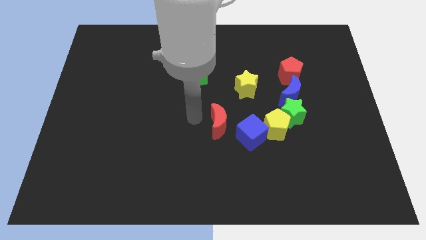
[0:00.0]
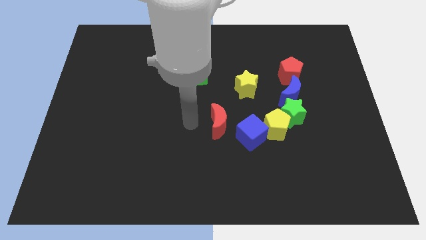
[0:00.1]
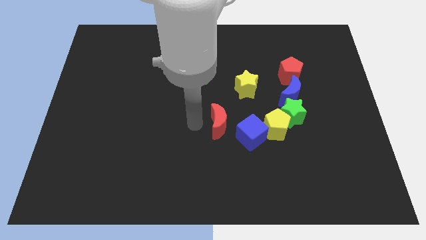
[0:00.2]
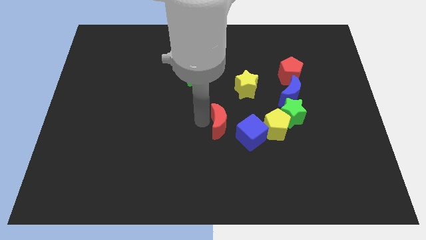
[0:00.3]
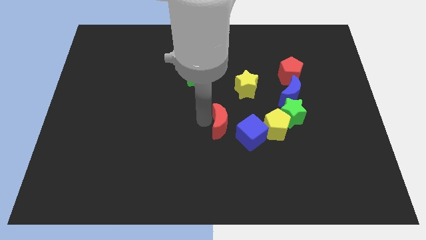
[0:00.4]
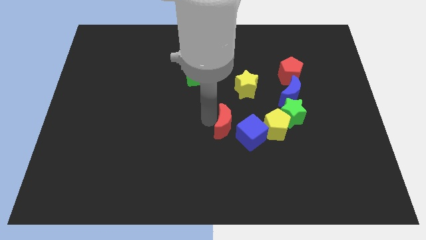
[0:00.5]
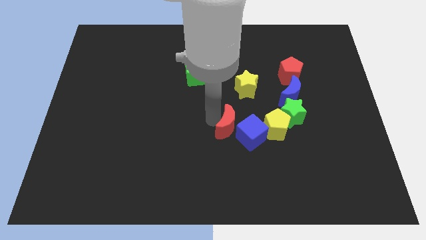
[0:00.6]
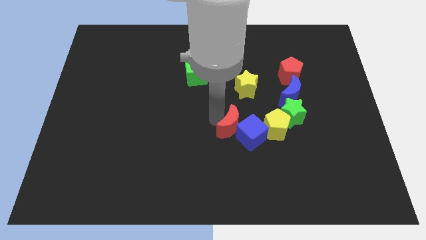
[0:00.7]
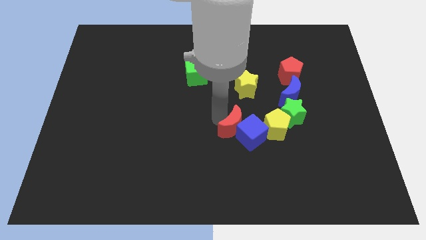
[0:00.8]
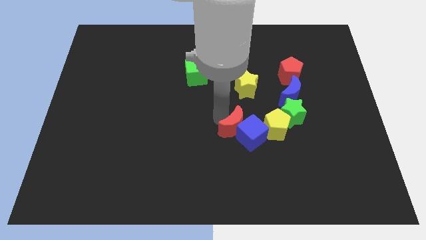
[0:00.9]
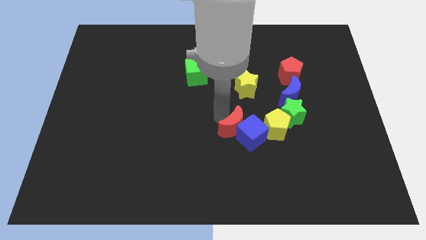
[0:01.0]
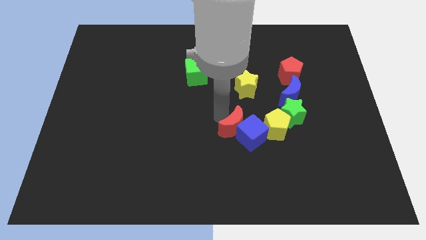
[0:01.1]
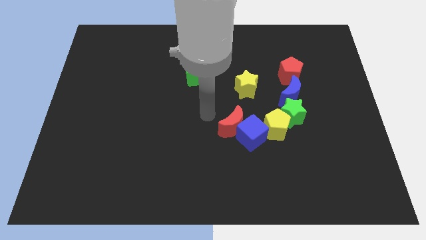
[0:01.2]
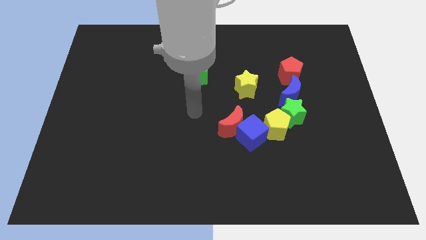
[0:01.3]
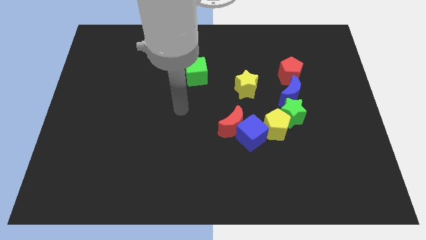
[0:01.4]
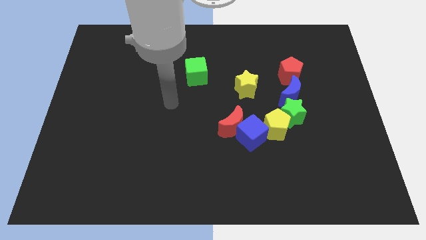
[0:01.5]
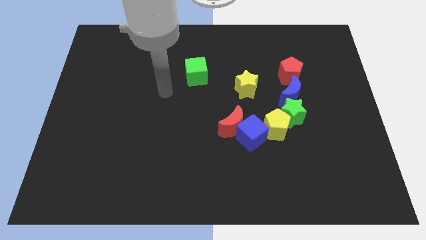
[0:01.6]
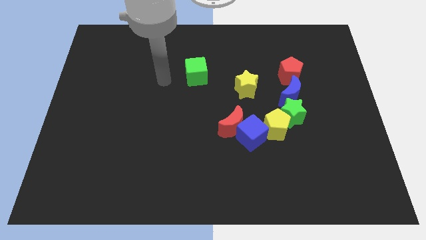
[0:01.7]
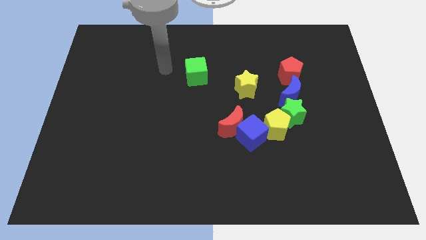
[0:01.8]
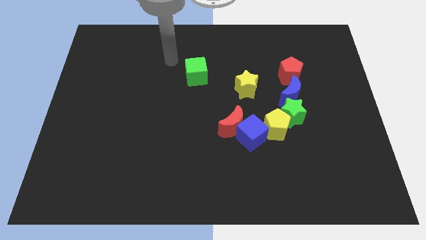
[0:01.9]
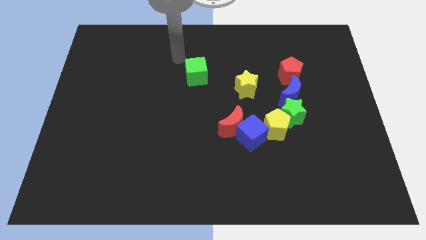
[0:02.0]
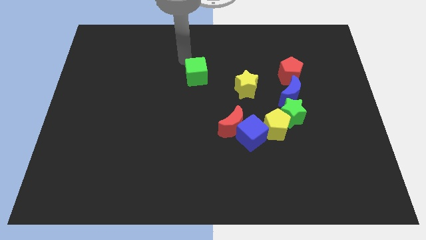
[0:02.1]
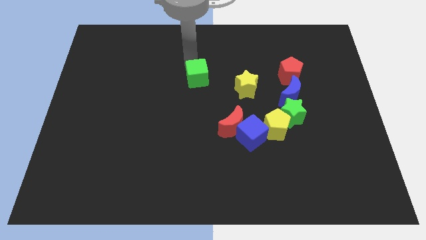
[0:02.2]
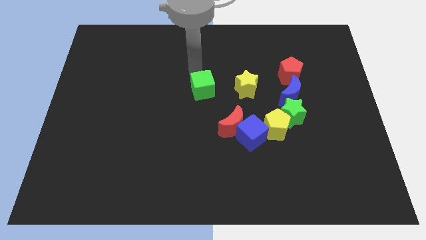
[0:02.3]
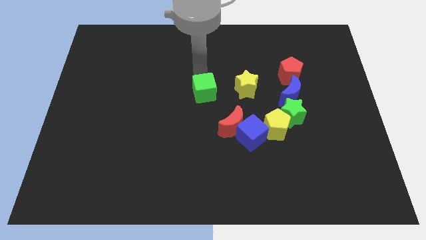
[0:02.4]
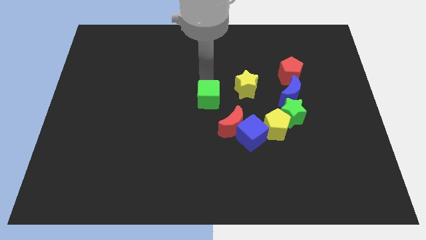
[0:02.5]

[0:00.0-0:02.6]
slide the green cube towards center

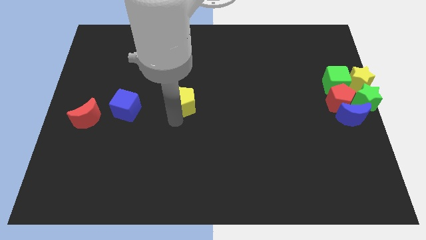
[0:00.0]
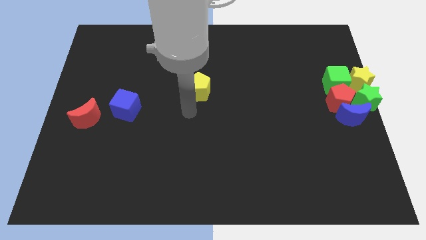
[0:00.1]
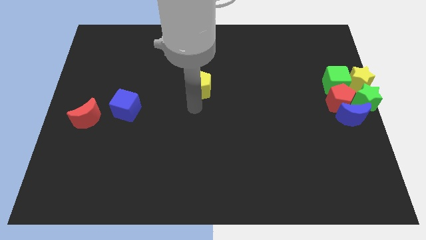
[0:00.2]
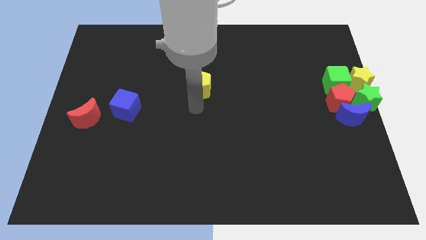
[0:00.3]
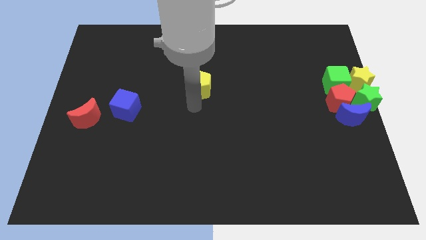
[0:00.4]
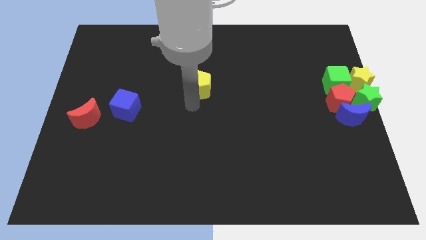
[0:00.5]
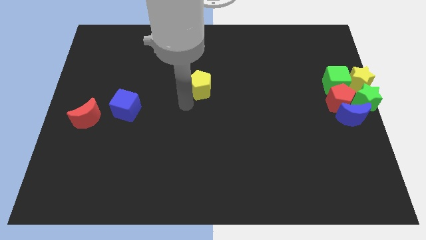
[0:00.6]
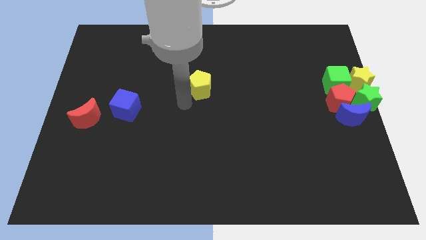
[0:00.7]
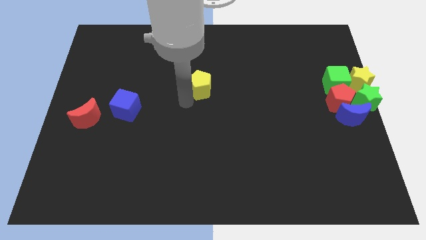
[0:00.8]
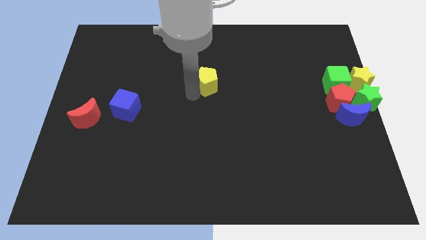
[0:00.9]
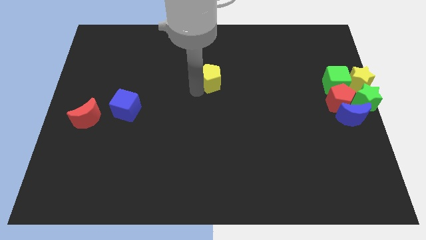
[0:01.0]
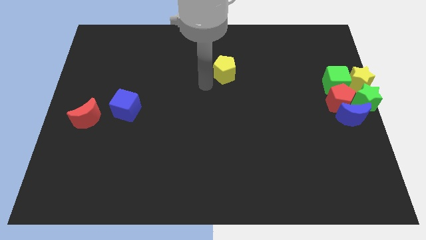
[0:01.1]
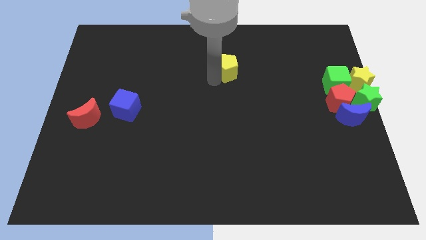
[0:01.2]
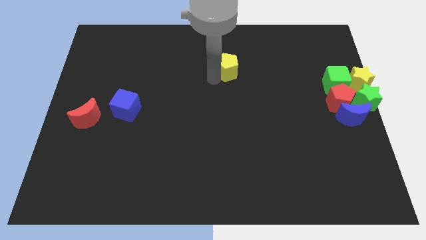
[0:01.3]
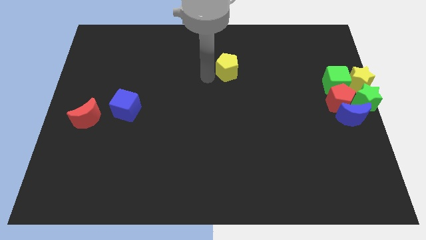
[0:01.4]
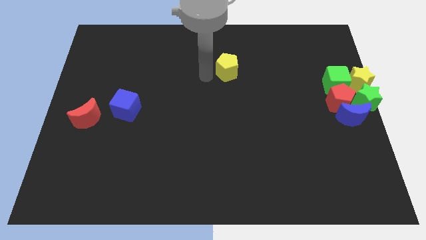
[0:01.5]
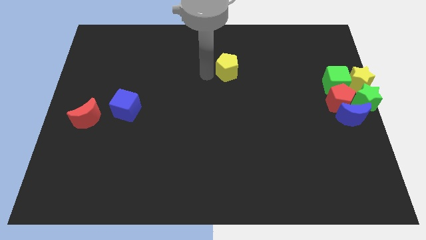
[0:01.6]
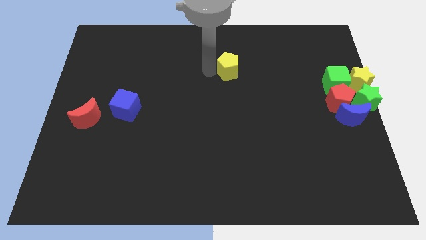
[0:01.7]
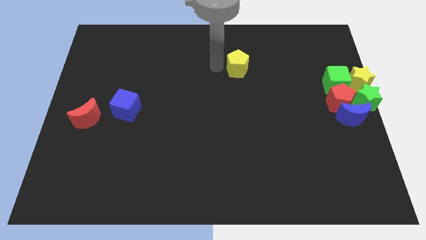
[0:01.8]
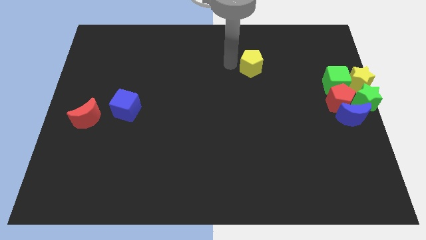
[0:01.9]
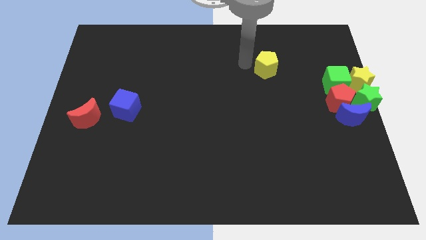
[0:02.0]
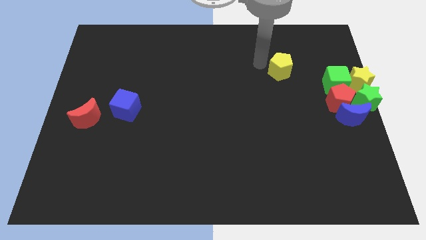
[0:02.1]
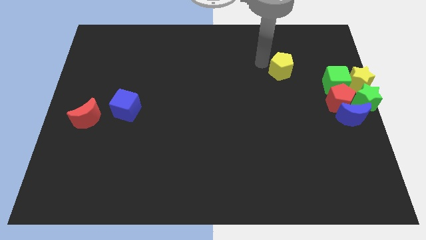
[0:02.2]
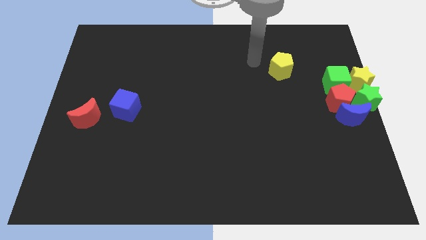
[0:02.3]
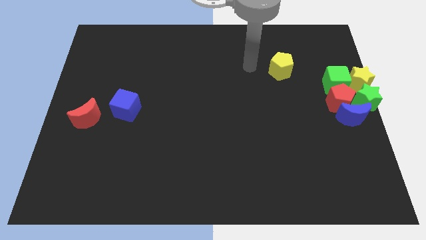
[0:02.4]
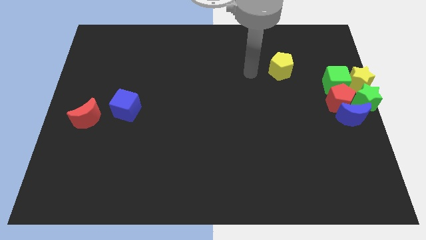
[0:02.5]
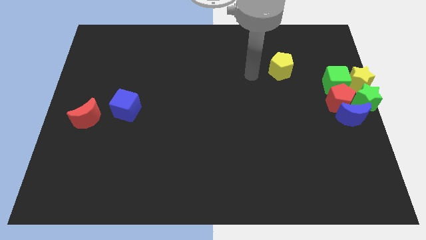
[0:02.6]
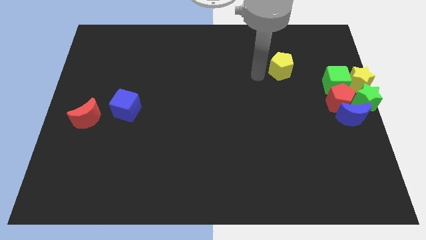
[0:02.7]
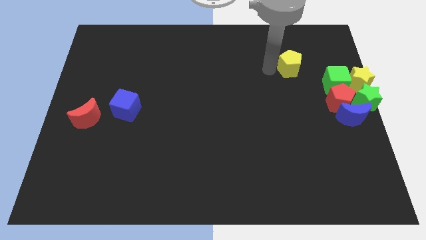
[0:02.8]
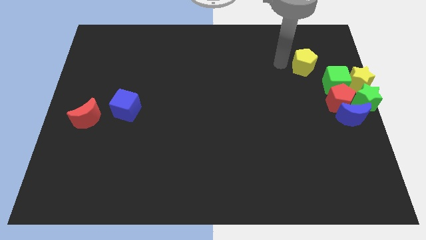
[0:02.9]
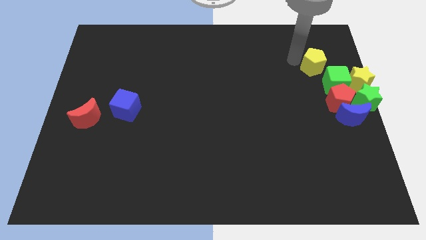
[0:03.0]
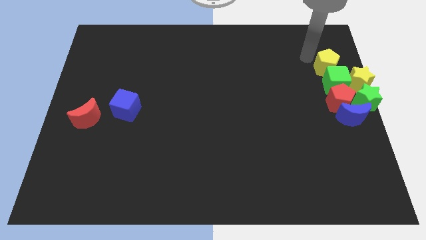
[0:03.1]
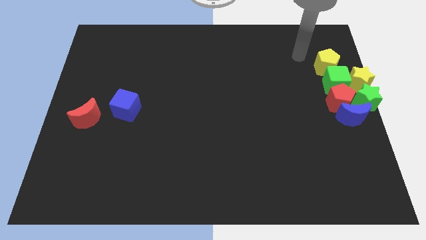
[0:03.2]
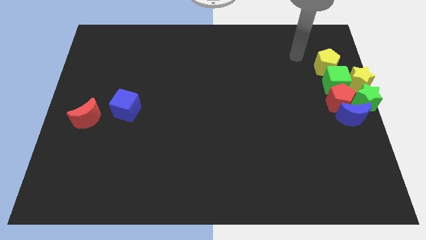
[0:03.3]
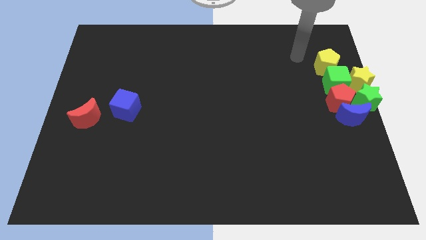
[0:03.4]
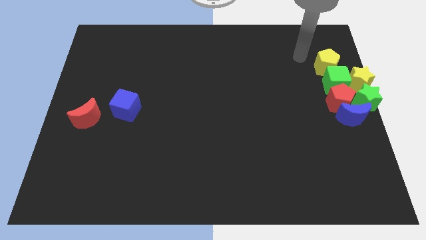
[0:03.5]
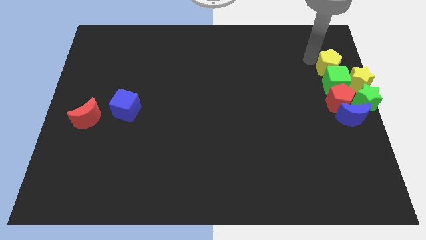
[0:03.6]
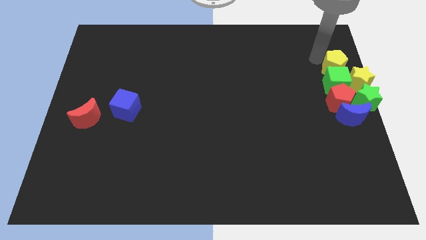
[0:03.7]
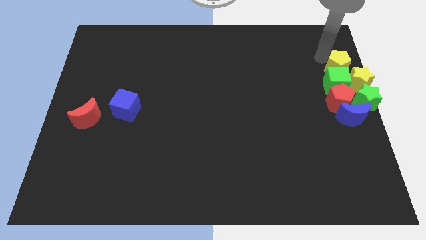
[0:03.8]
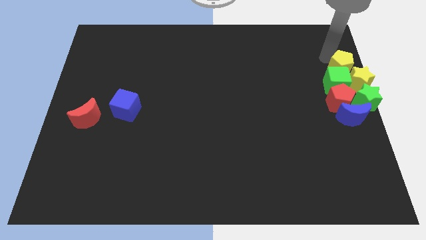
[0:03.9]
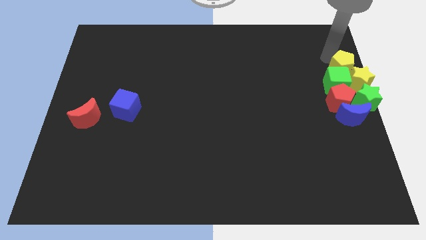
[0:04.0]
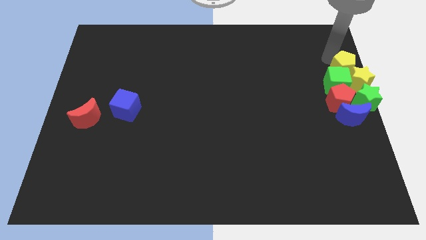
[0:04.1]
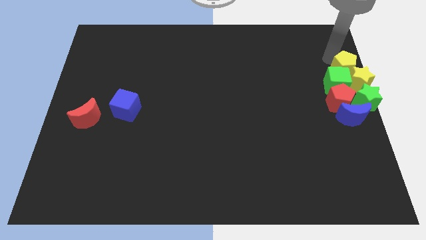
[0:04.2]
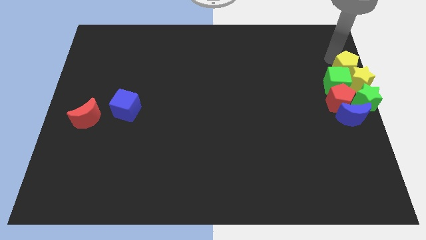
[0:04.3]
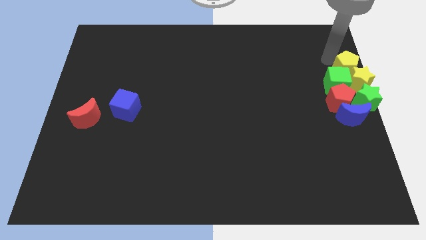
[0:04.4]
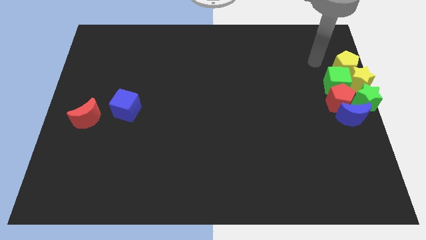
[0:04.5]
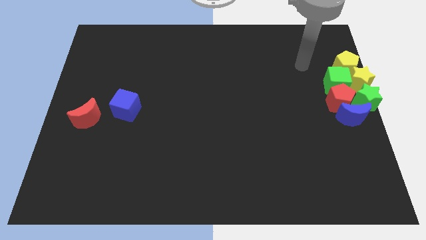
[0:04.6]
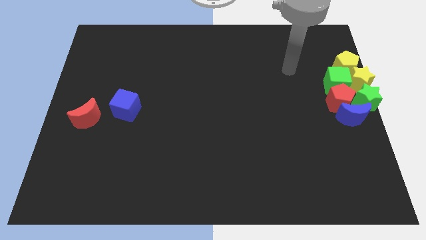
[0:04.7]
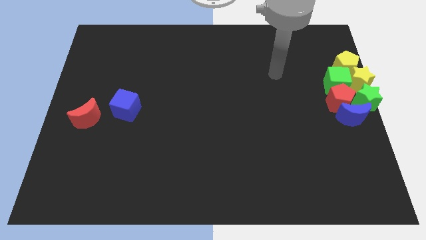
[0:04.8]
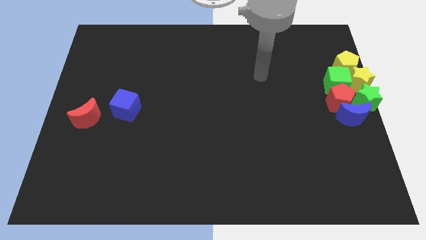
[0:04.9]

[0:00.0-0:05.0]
place the yellow pentagon above the yellow star and the green cube

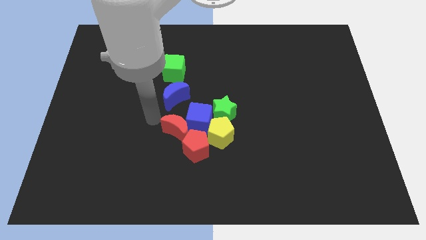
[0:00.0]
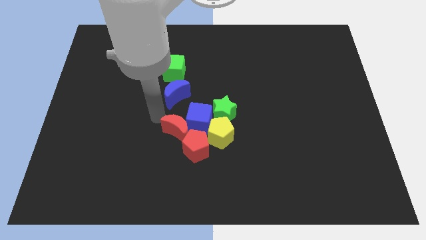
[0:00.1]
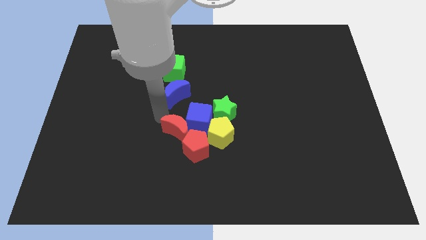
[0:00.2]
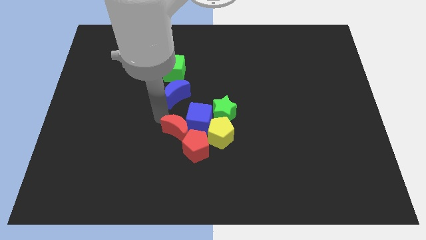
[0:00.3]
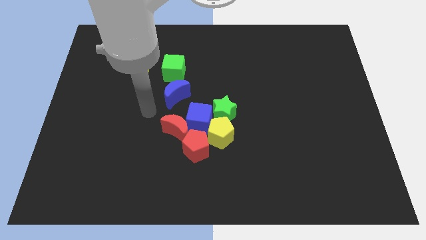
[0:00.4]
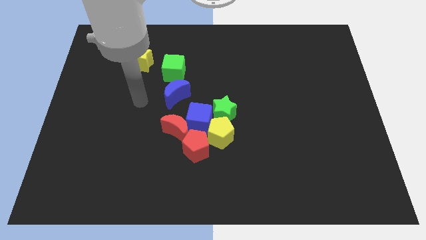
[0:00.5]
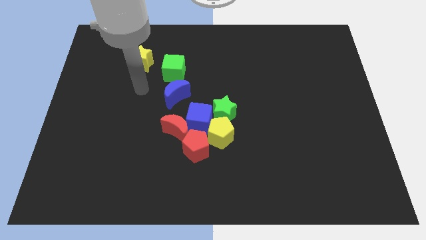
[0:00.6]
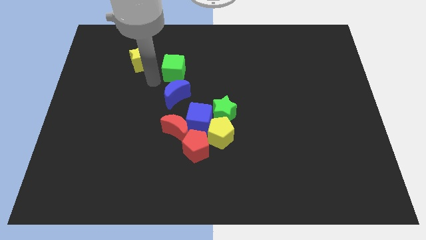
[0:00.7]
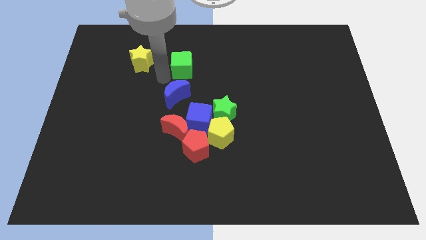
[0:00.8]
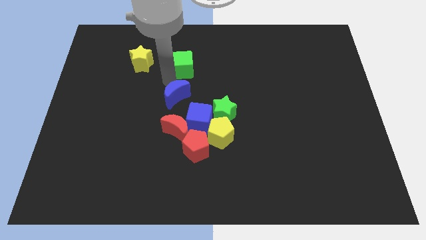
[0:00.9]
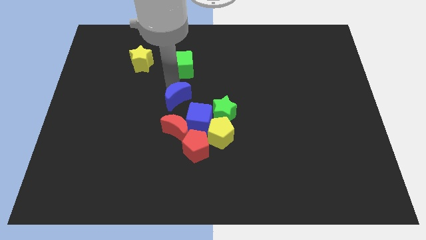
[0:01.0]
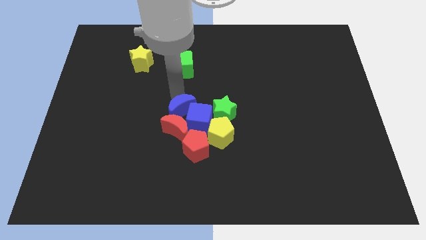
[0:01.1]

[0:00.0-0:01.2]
move the blue moon close to the blue cube

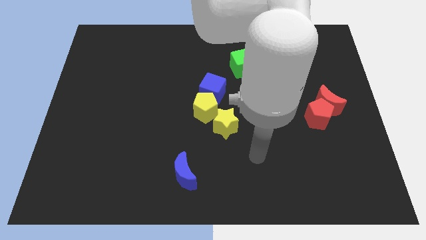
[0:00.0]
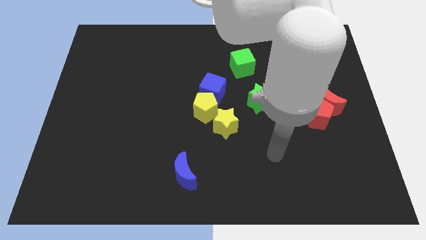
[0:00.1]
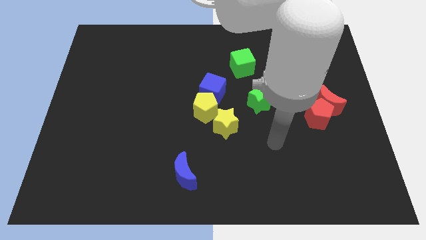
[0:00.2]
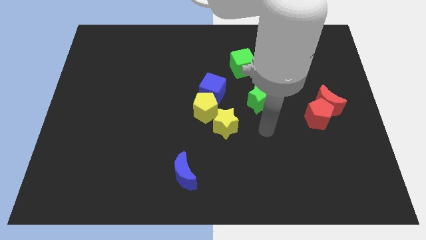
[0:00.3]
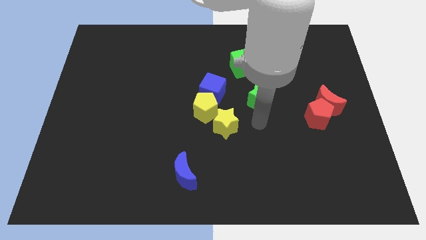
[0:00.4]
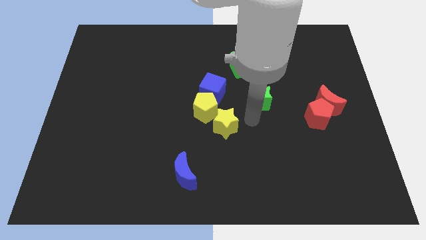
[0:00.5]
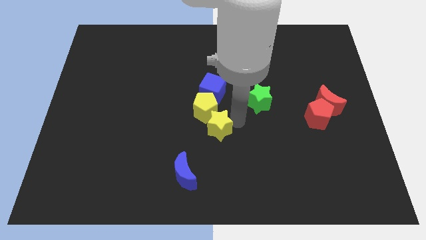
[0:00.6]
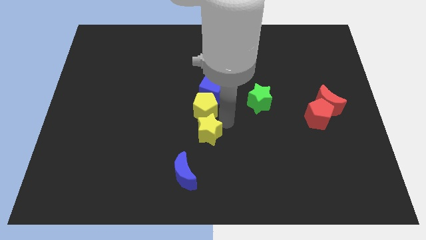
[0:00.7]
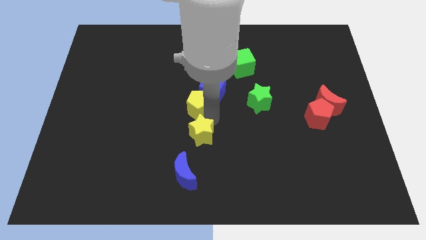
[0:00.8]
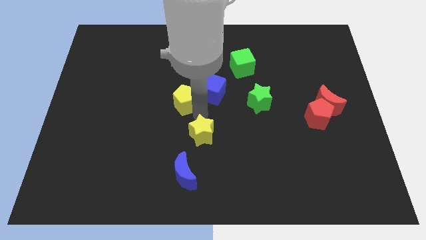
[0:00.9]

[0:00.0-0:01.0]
point your arm between yellow star and yellow pentagon
